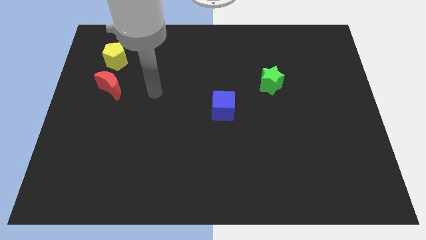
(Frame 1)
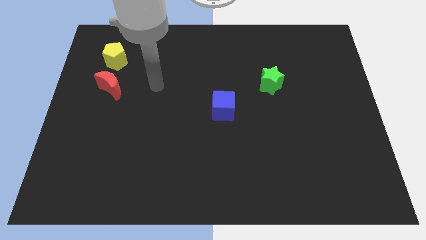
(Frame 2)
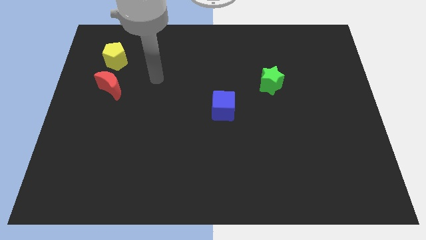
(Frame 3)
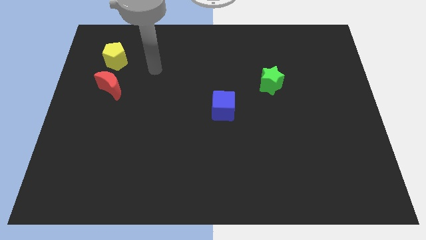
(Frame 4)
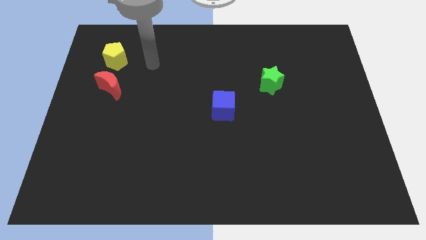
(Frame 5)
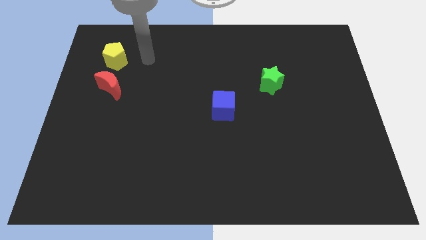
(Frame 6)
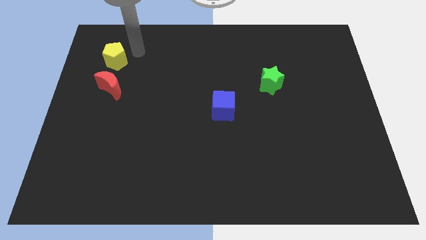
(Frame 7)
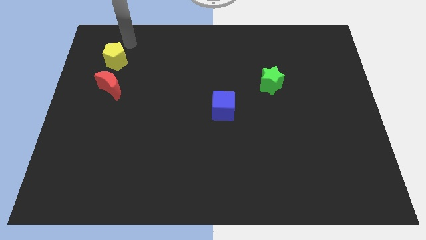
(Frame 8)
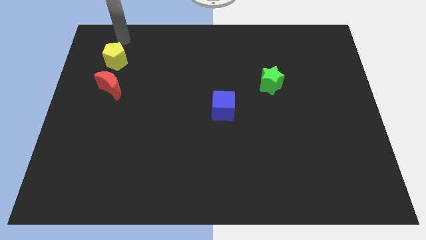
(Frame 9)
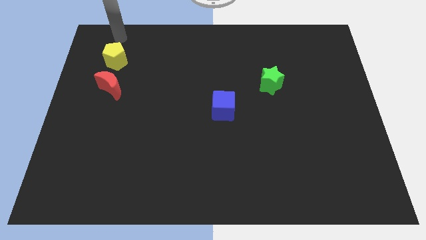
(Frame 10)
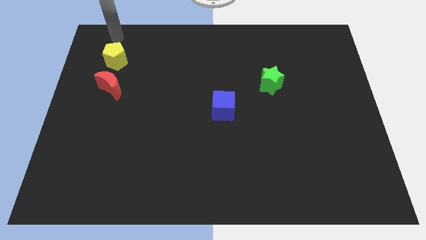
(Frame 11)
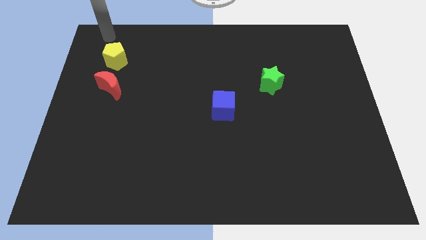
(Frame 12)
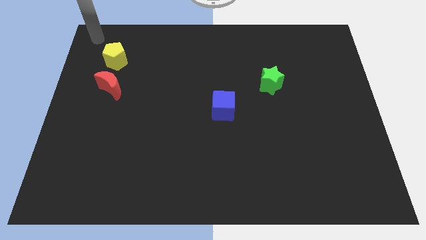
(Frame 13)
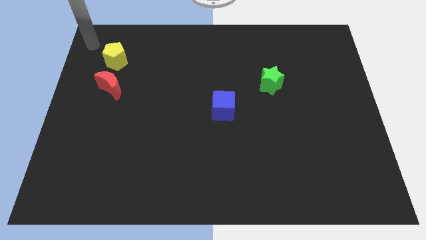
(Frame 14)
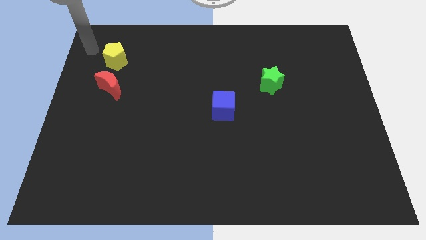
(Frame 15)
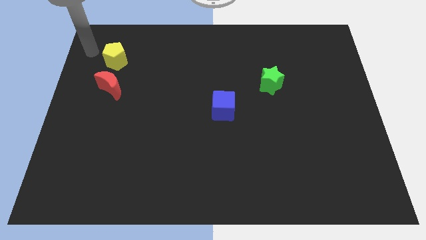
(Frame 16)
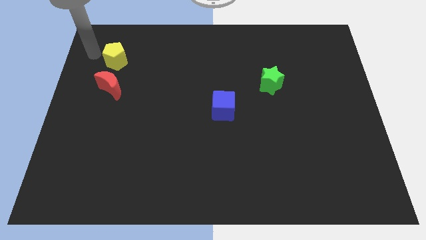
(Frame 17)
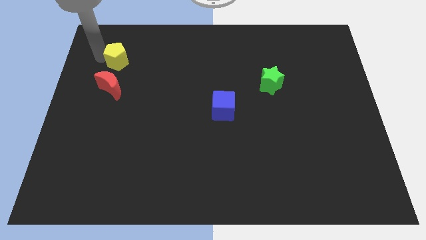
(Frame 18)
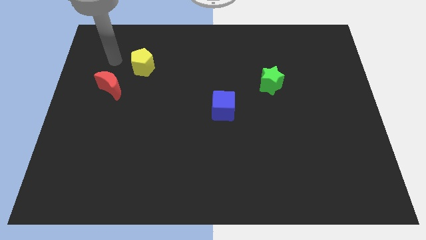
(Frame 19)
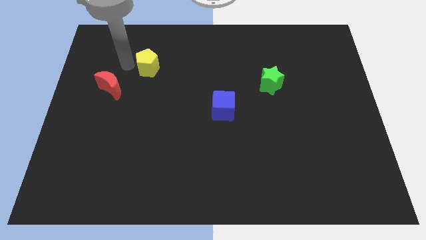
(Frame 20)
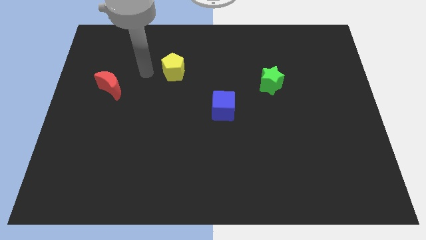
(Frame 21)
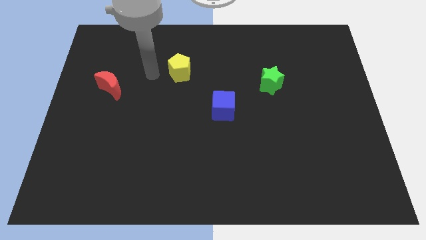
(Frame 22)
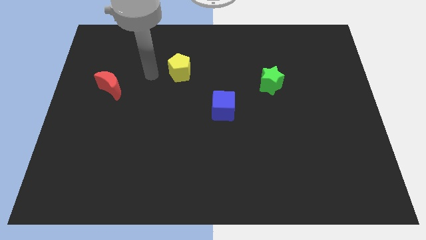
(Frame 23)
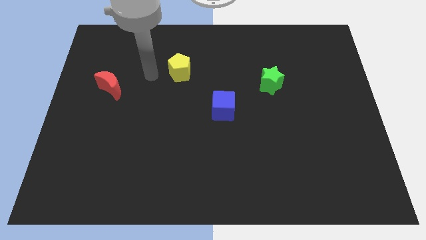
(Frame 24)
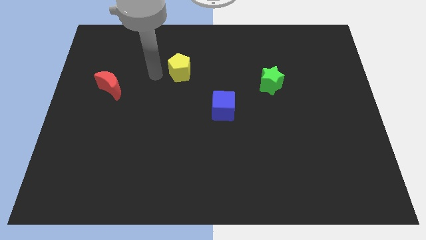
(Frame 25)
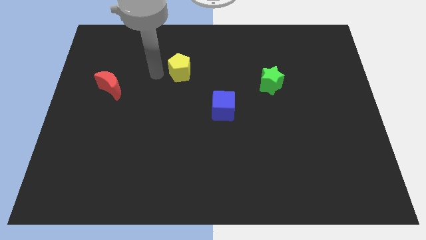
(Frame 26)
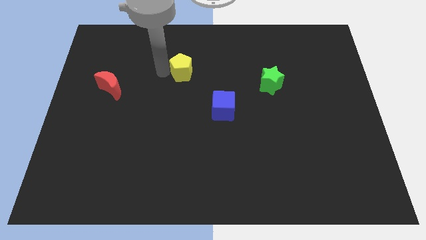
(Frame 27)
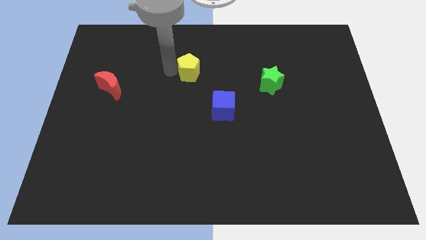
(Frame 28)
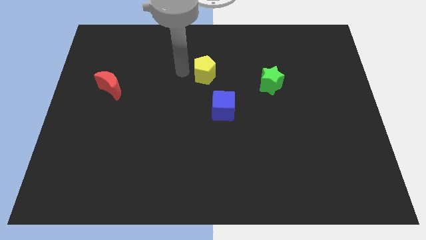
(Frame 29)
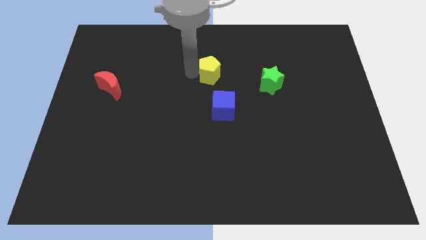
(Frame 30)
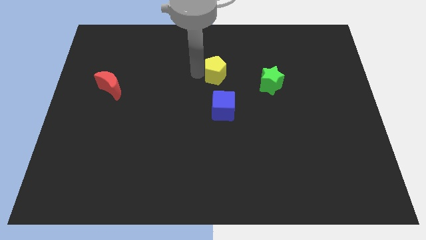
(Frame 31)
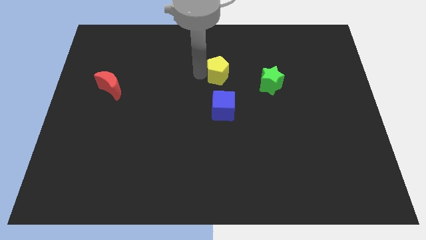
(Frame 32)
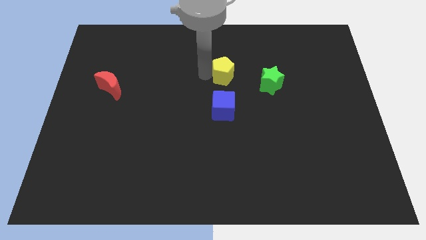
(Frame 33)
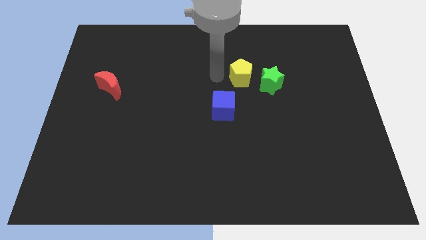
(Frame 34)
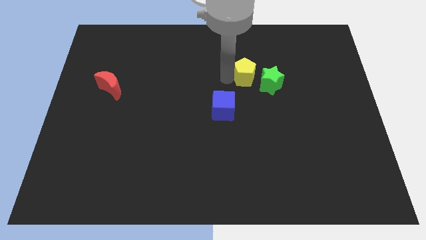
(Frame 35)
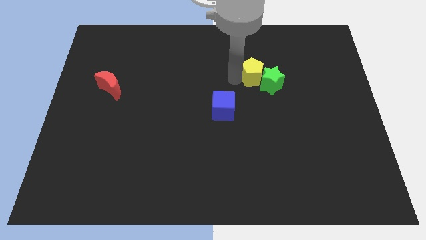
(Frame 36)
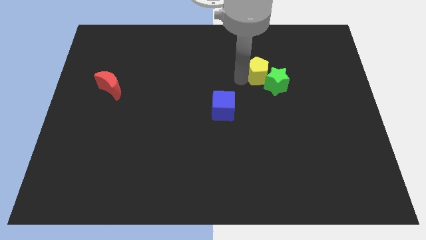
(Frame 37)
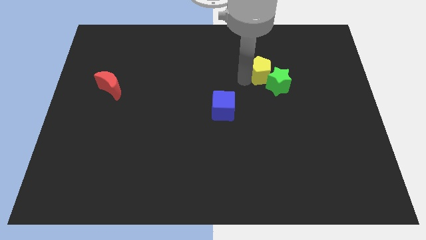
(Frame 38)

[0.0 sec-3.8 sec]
put the yellow block towards the star

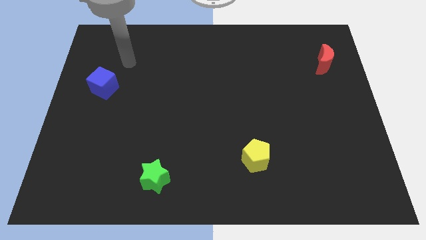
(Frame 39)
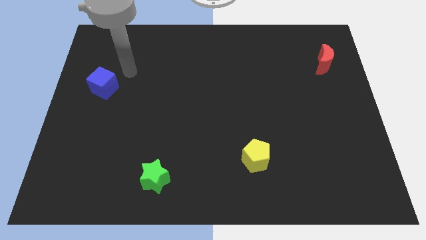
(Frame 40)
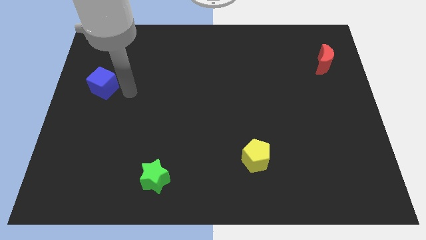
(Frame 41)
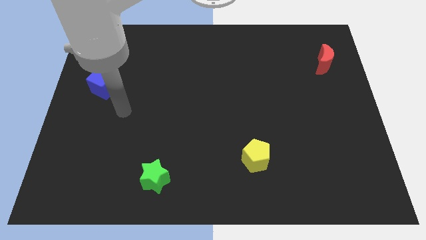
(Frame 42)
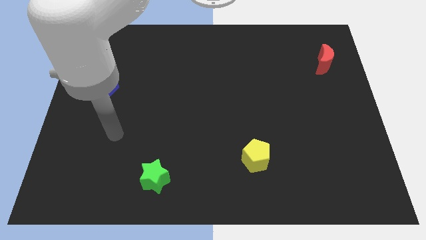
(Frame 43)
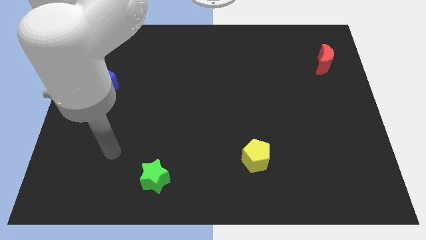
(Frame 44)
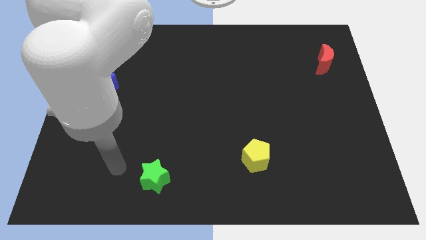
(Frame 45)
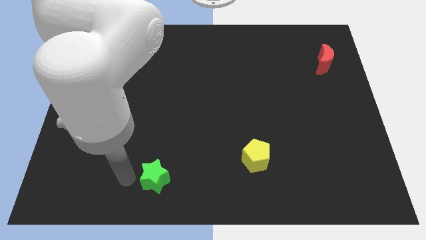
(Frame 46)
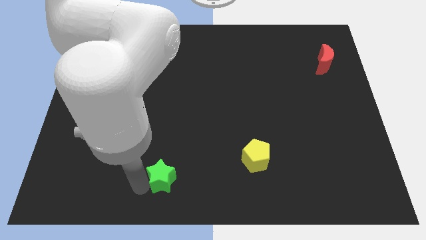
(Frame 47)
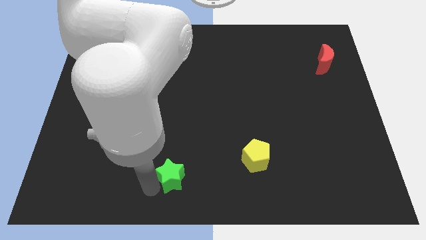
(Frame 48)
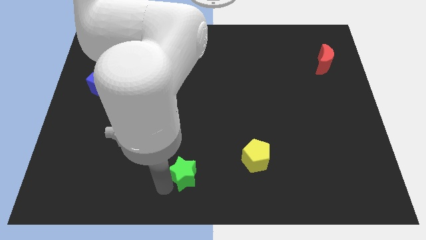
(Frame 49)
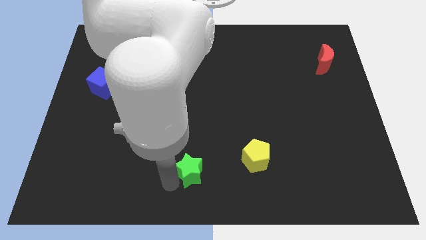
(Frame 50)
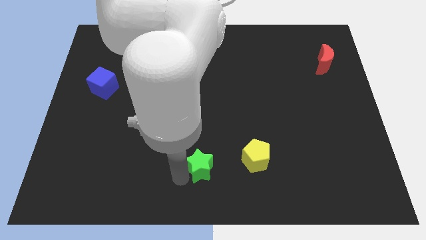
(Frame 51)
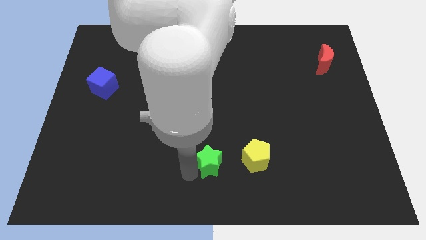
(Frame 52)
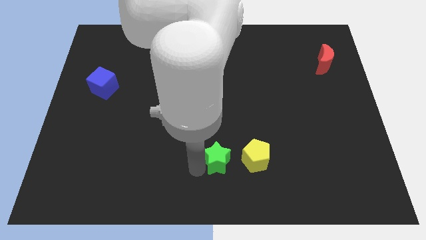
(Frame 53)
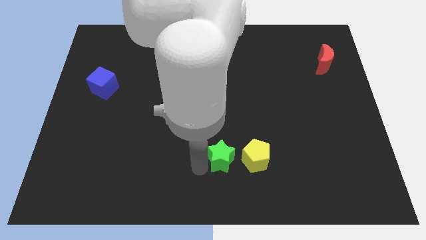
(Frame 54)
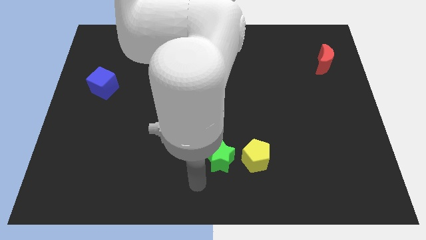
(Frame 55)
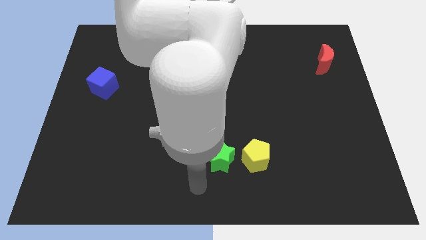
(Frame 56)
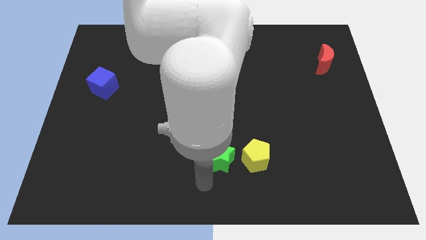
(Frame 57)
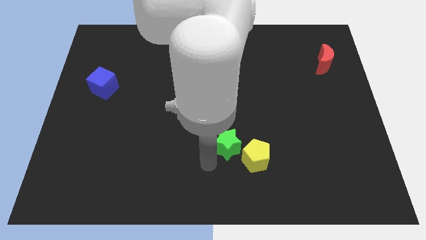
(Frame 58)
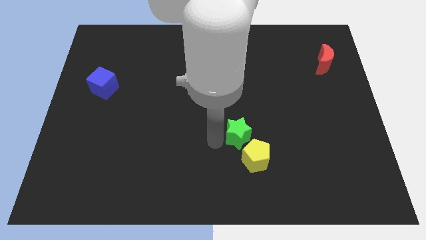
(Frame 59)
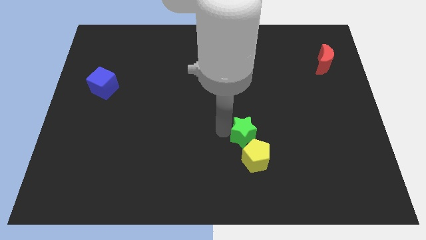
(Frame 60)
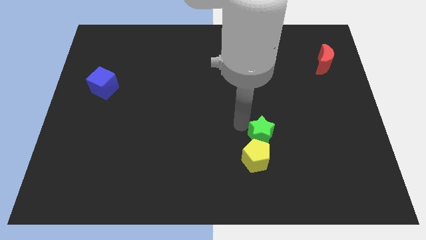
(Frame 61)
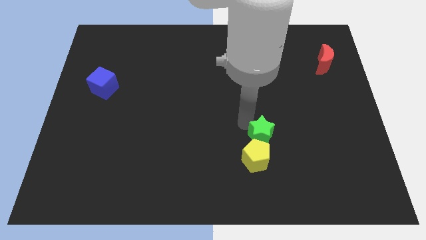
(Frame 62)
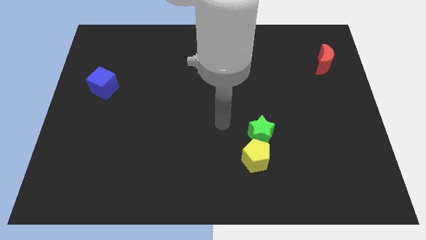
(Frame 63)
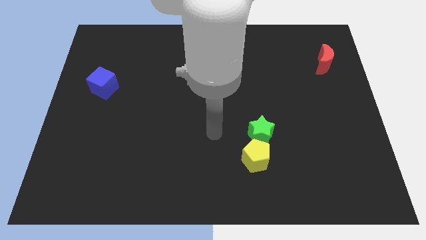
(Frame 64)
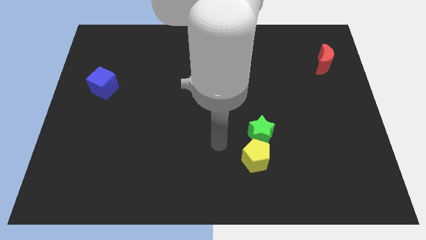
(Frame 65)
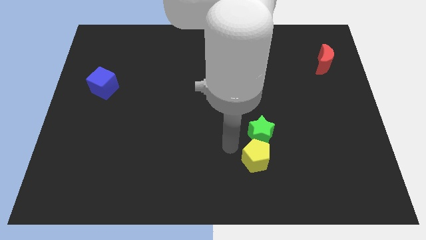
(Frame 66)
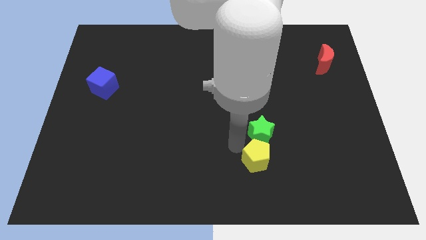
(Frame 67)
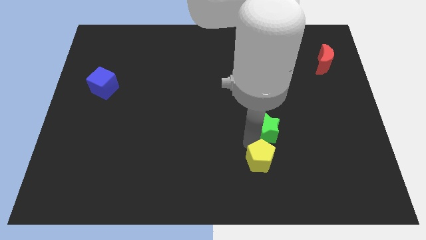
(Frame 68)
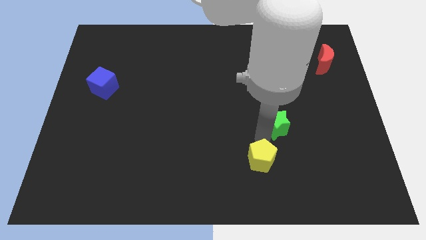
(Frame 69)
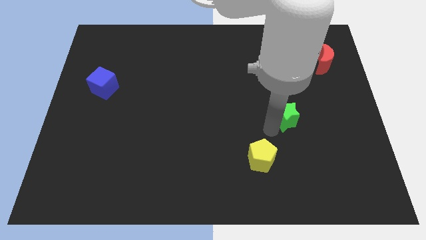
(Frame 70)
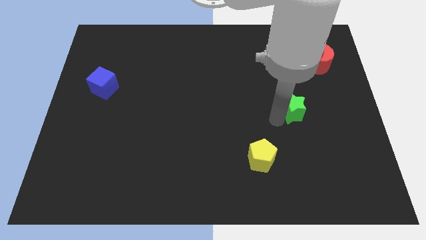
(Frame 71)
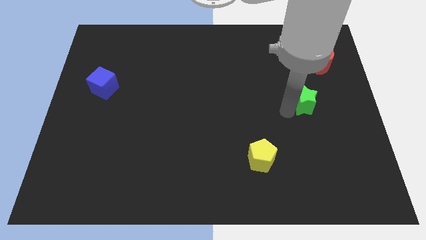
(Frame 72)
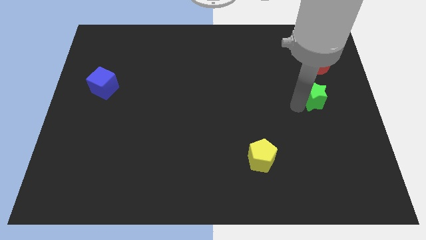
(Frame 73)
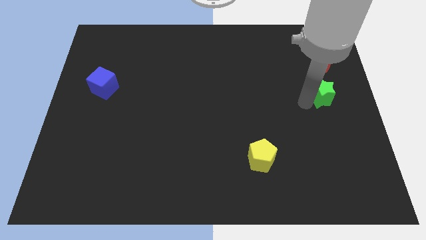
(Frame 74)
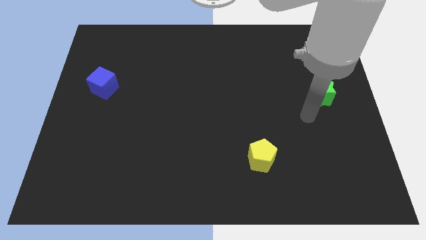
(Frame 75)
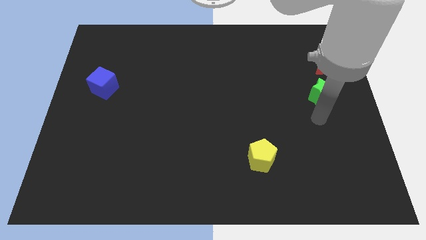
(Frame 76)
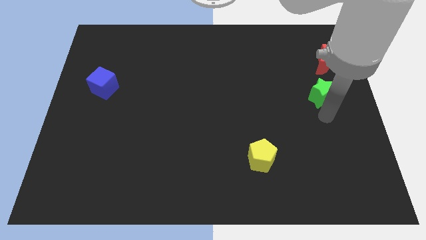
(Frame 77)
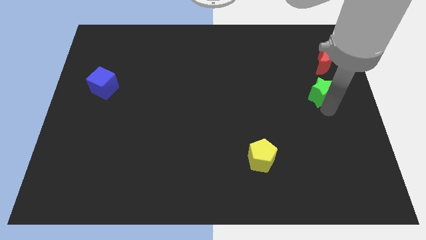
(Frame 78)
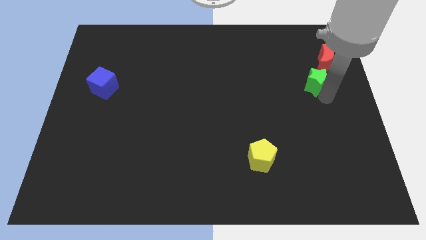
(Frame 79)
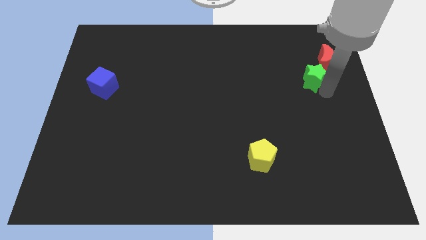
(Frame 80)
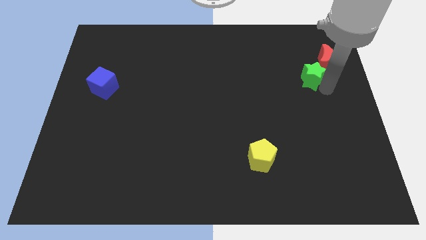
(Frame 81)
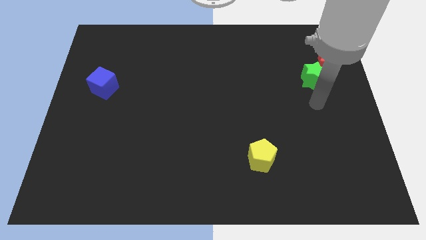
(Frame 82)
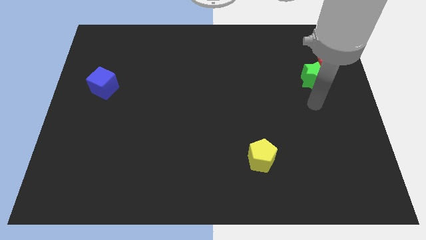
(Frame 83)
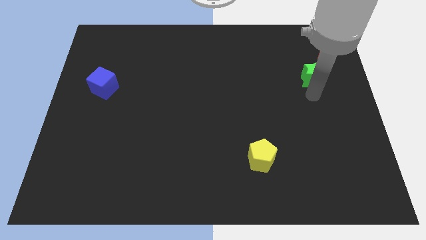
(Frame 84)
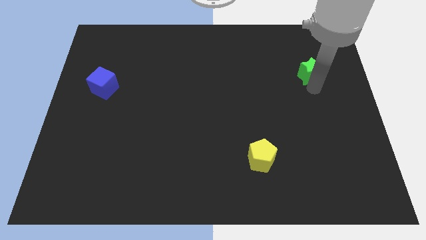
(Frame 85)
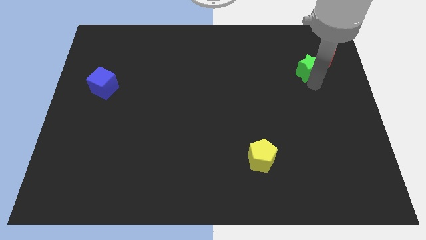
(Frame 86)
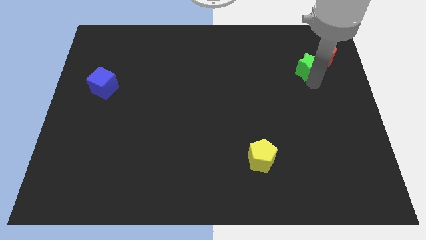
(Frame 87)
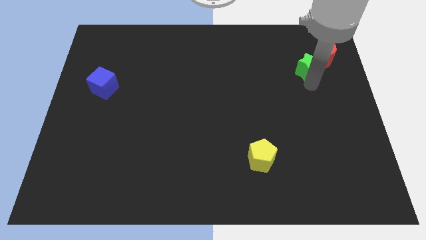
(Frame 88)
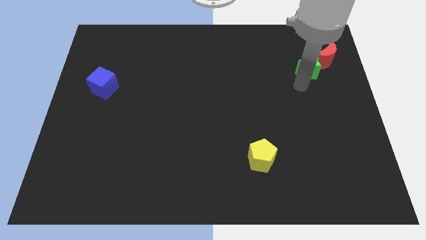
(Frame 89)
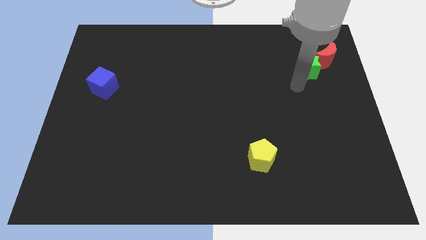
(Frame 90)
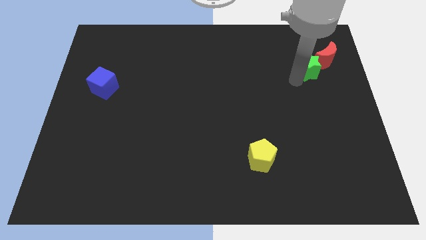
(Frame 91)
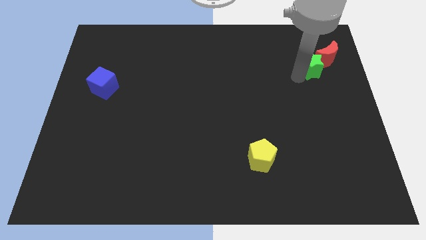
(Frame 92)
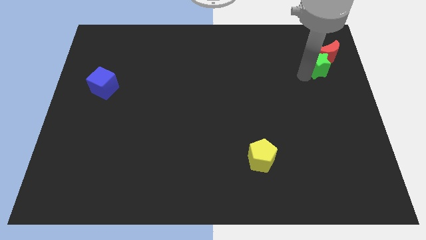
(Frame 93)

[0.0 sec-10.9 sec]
move the green block close to the red block
